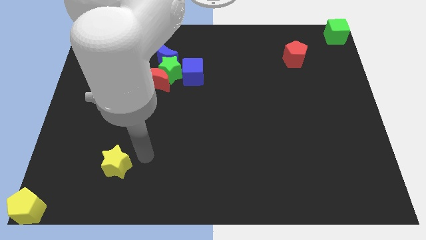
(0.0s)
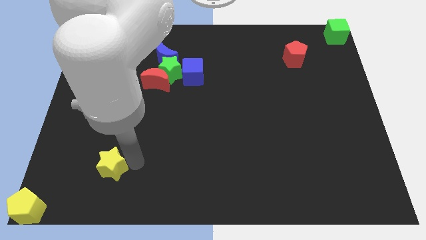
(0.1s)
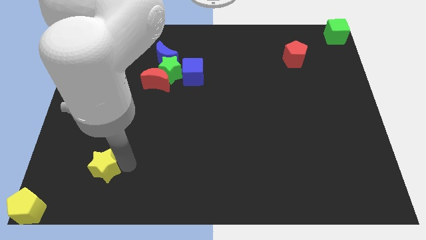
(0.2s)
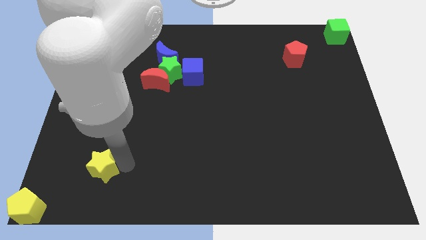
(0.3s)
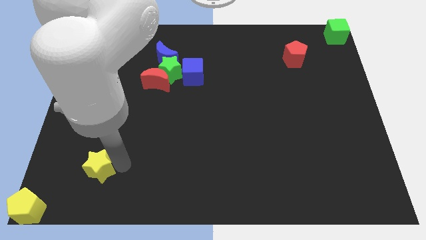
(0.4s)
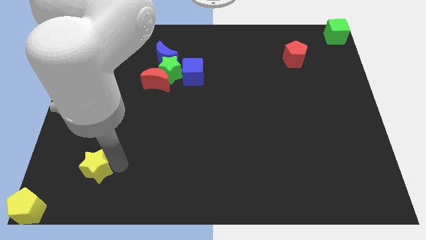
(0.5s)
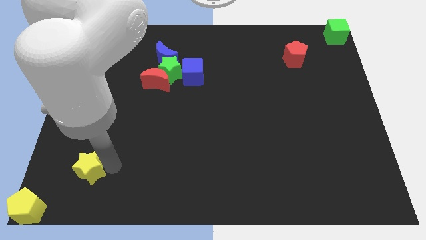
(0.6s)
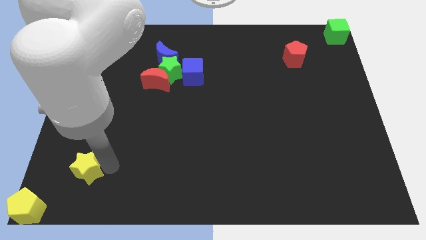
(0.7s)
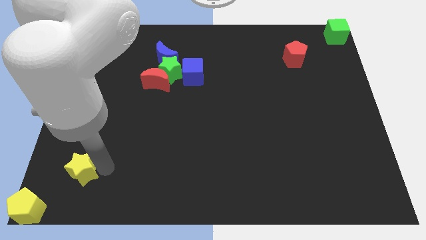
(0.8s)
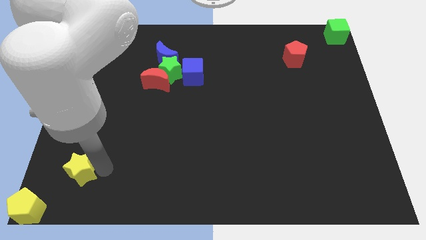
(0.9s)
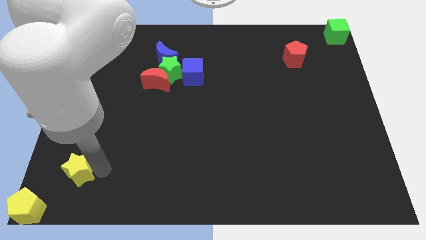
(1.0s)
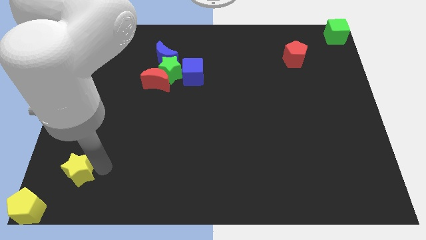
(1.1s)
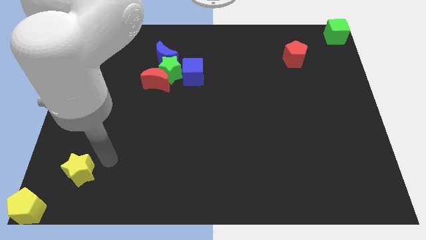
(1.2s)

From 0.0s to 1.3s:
move the yellow star diagonally to the yellow pentagon

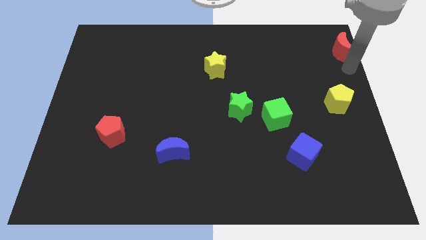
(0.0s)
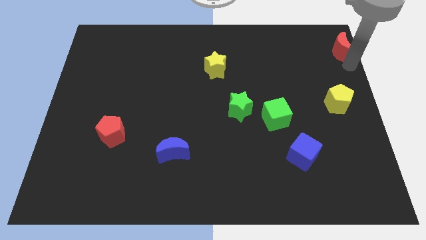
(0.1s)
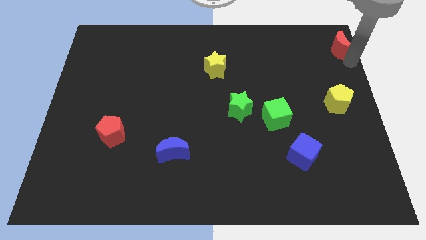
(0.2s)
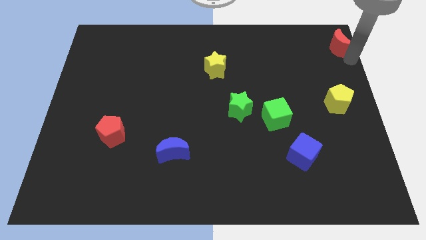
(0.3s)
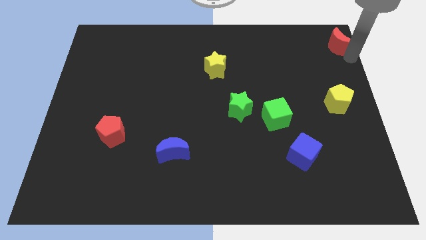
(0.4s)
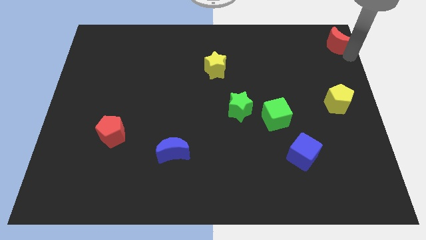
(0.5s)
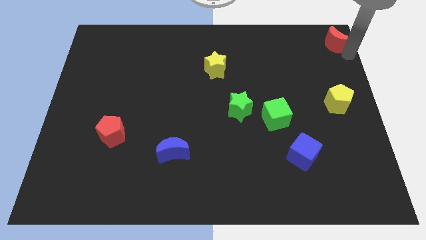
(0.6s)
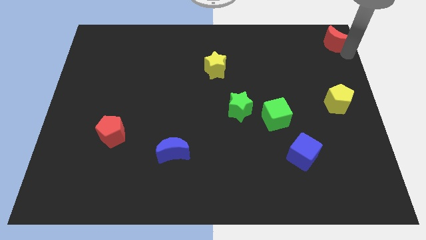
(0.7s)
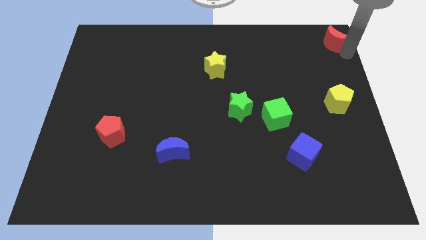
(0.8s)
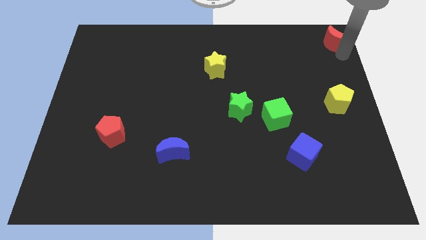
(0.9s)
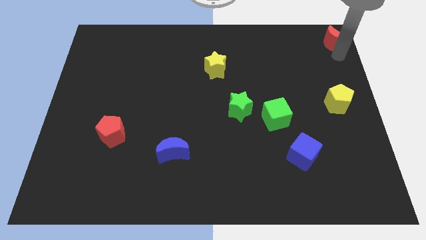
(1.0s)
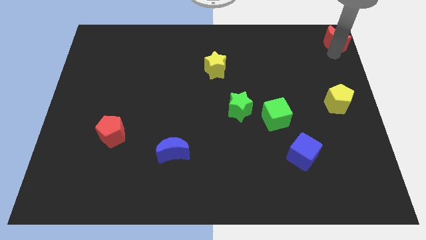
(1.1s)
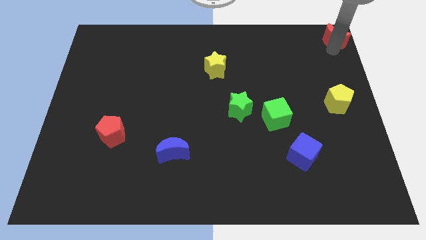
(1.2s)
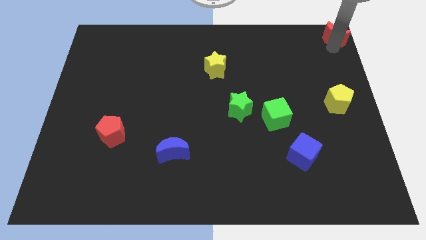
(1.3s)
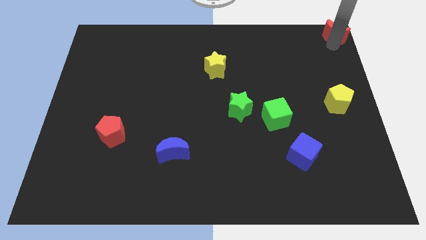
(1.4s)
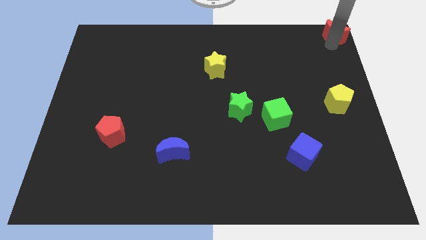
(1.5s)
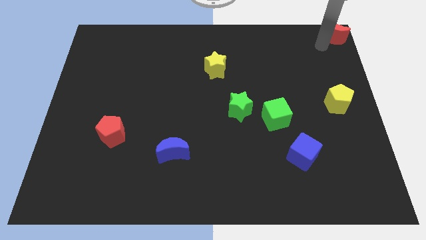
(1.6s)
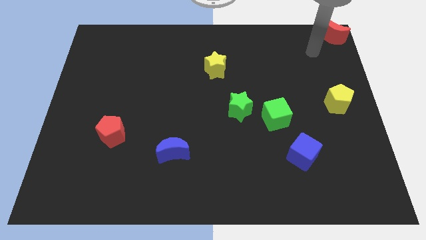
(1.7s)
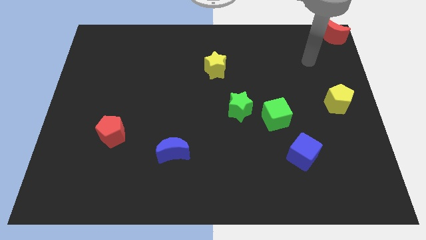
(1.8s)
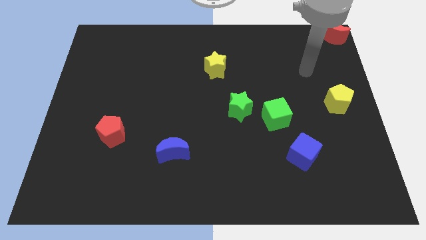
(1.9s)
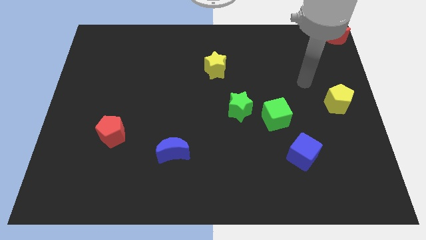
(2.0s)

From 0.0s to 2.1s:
push red moon to the top right corner

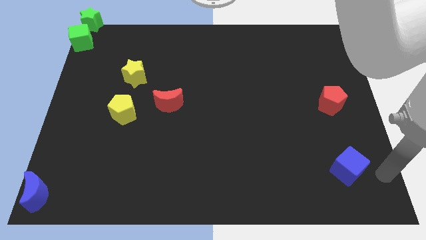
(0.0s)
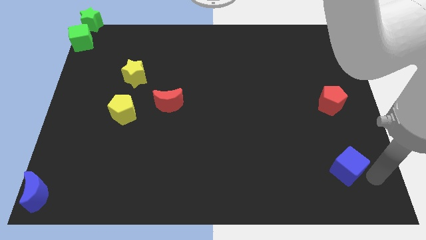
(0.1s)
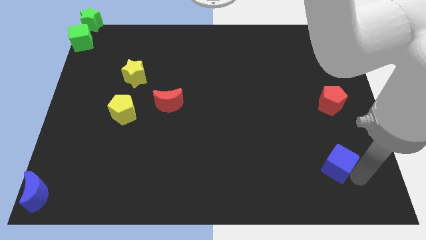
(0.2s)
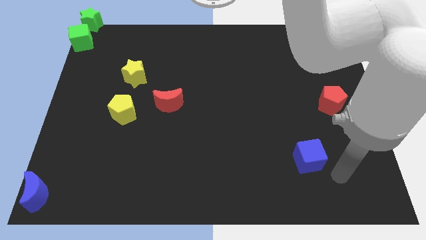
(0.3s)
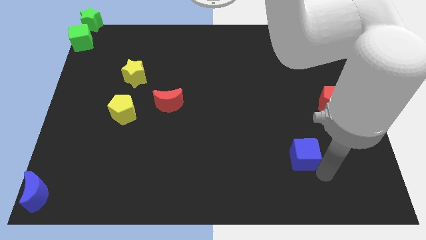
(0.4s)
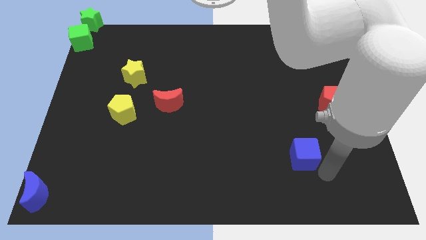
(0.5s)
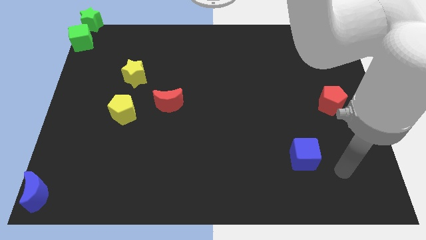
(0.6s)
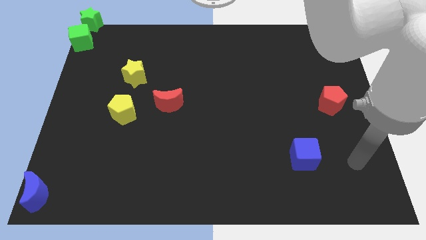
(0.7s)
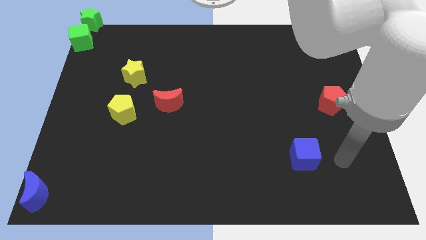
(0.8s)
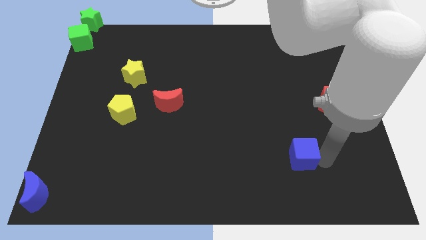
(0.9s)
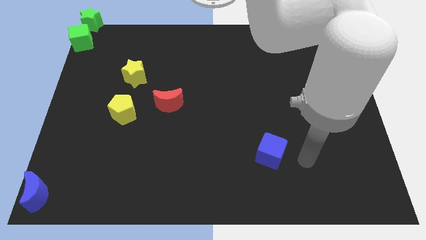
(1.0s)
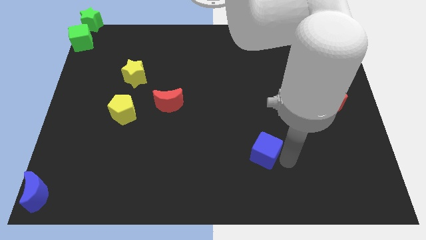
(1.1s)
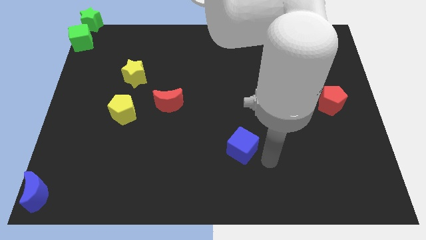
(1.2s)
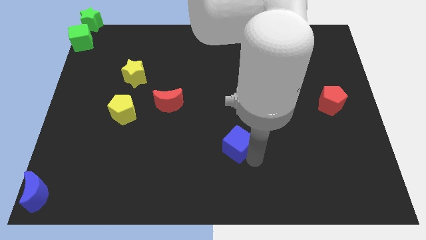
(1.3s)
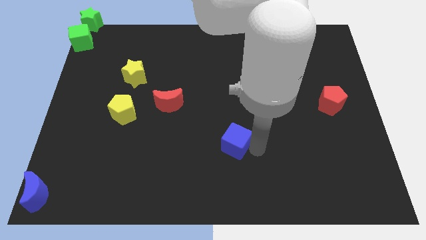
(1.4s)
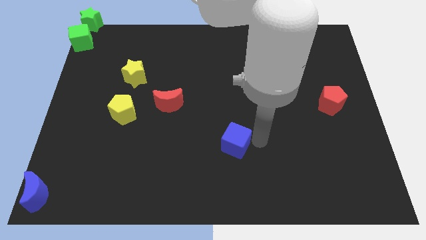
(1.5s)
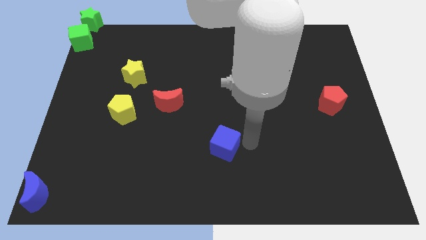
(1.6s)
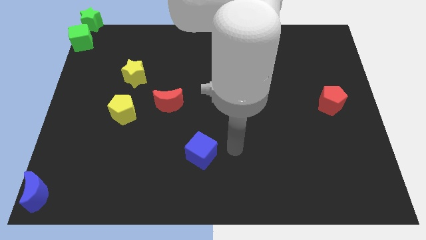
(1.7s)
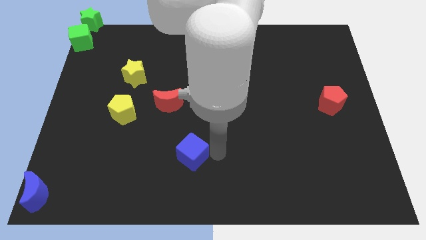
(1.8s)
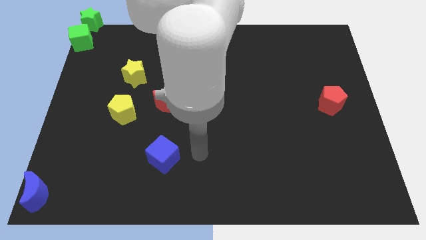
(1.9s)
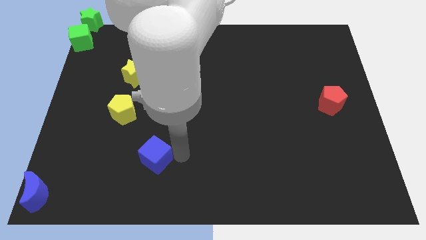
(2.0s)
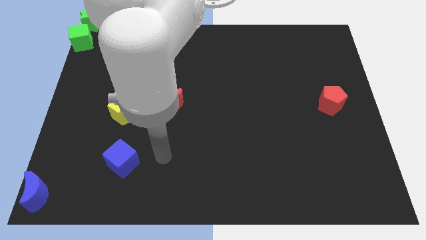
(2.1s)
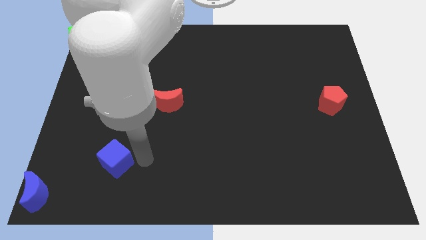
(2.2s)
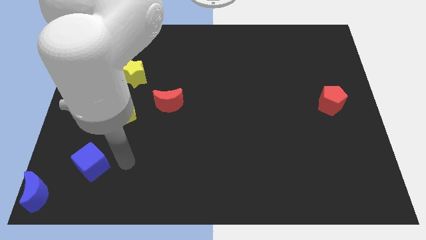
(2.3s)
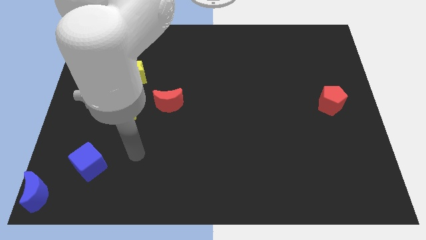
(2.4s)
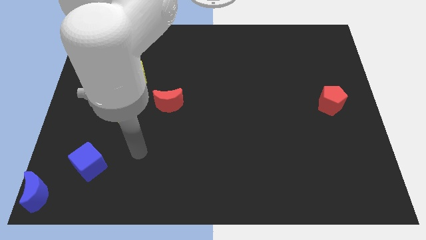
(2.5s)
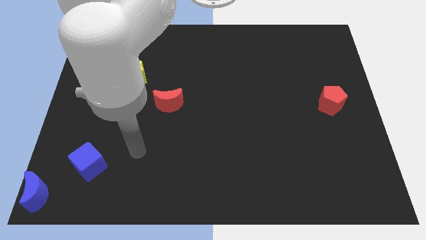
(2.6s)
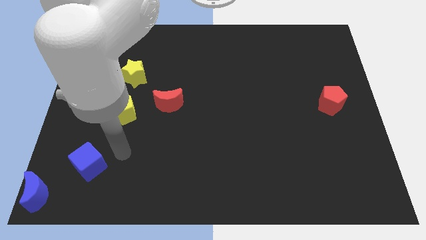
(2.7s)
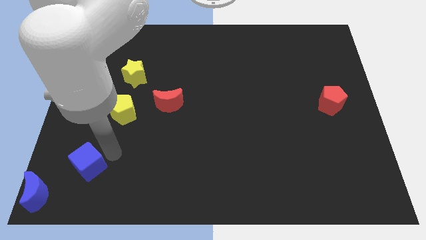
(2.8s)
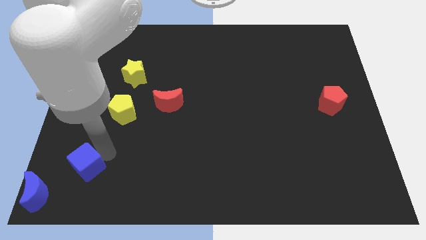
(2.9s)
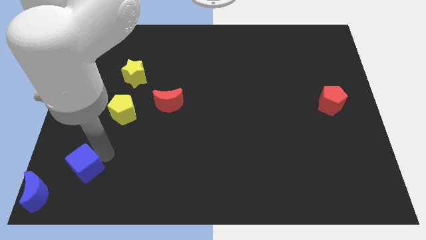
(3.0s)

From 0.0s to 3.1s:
move the blue cube towards the bottom left side of the board

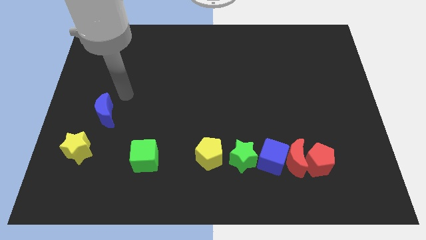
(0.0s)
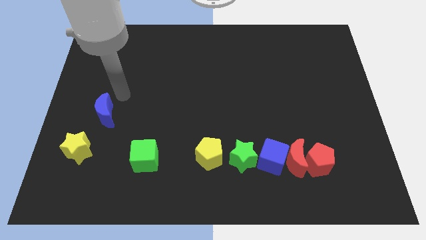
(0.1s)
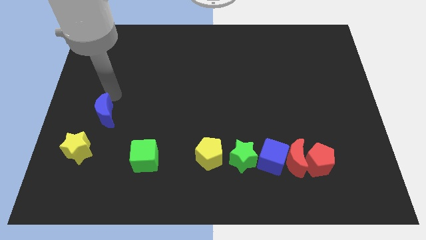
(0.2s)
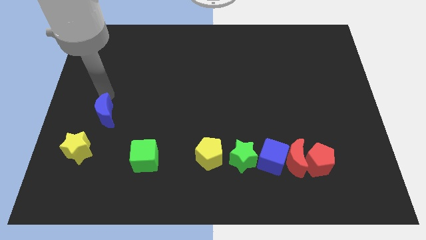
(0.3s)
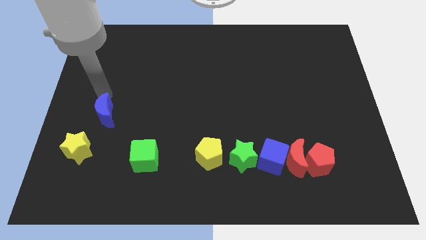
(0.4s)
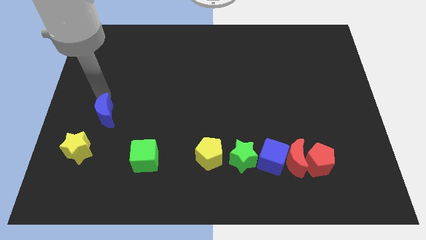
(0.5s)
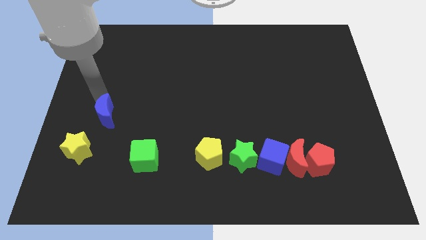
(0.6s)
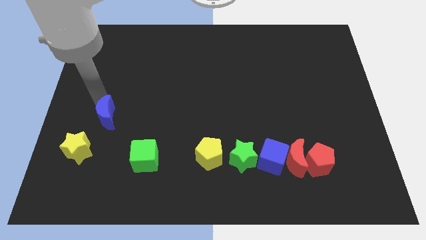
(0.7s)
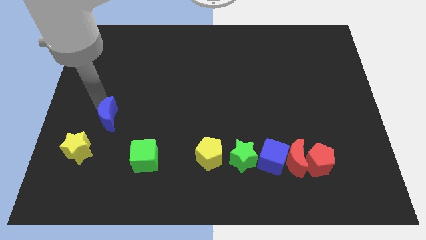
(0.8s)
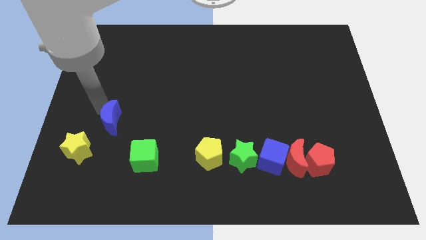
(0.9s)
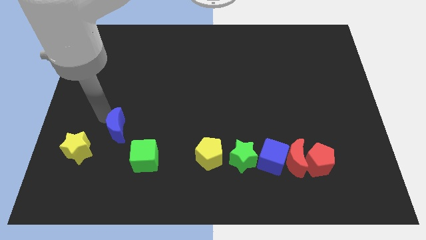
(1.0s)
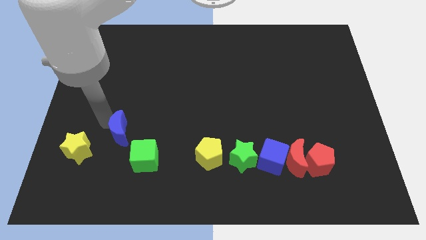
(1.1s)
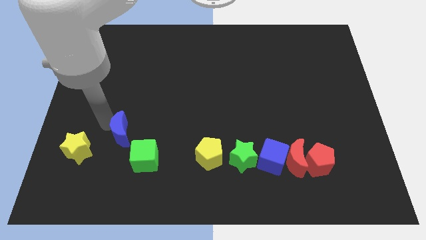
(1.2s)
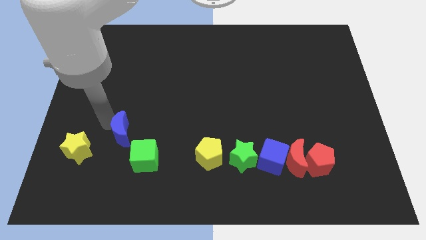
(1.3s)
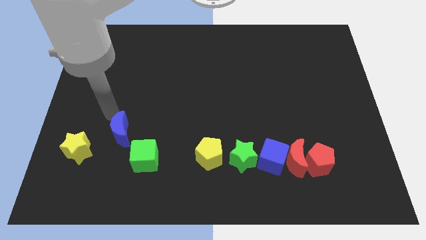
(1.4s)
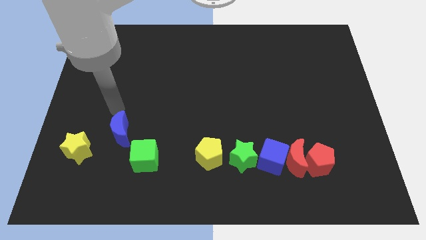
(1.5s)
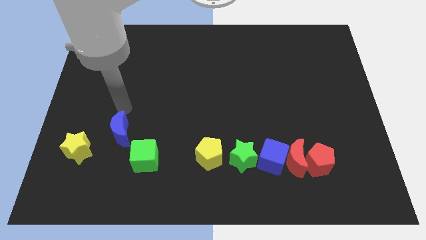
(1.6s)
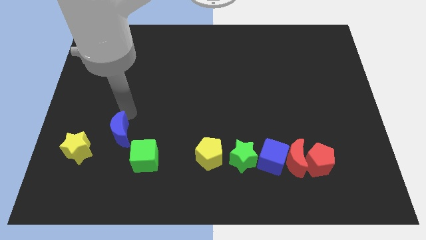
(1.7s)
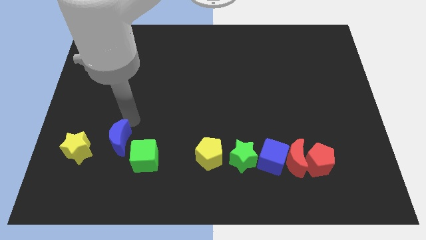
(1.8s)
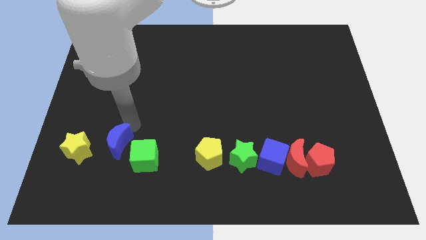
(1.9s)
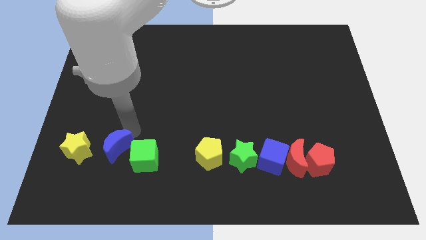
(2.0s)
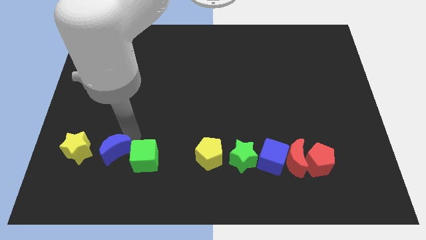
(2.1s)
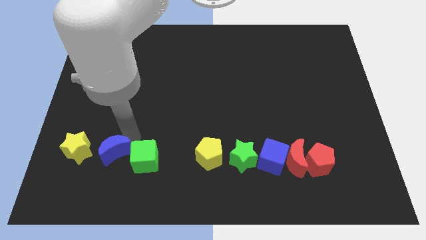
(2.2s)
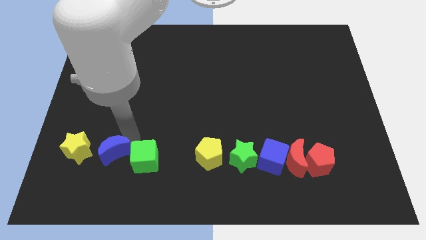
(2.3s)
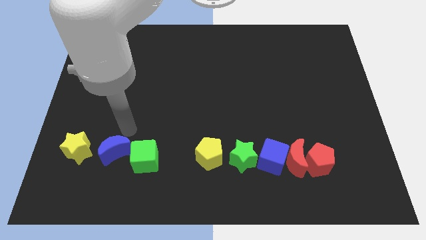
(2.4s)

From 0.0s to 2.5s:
push the blue crescent towards the left of green cube
